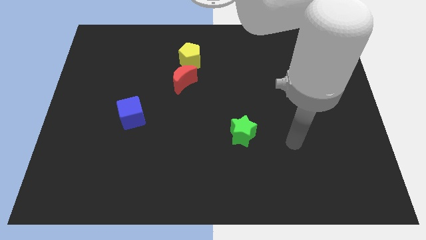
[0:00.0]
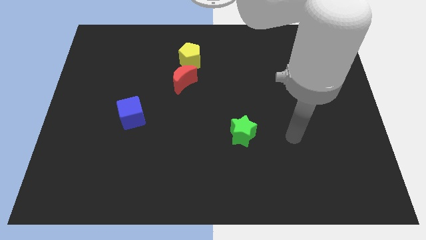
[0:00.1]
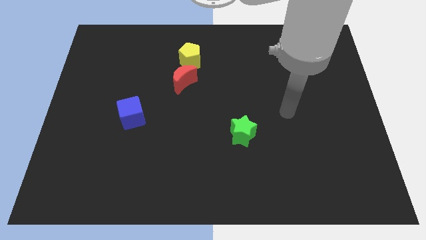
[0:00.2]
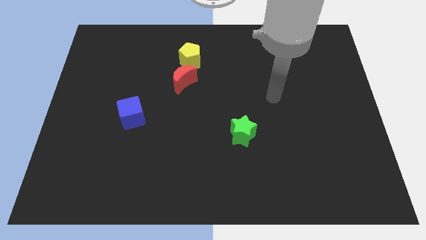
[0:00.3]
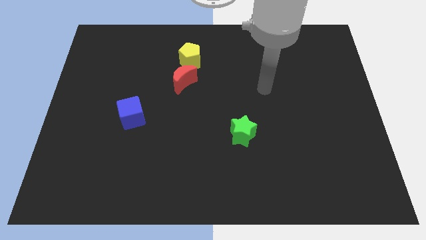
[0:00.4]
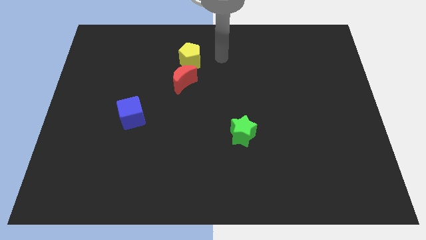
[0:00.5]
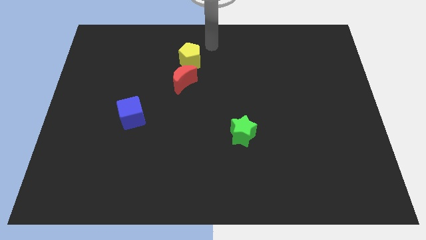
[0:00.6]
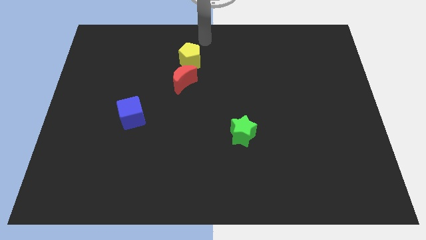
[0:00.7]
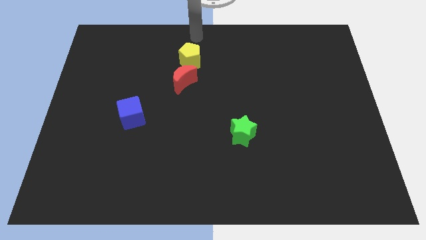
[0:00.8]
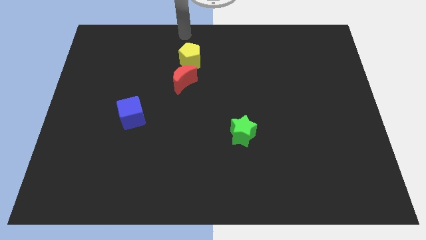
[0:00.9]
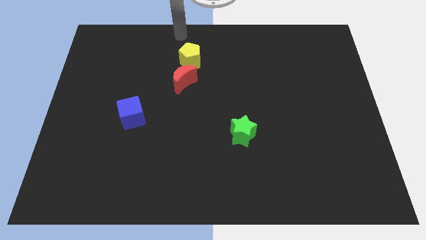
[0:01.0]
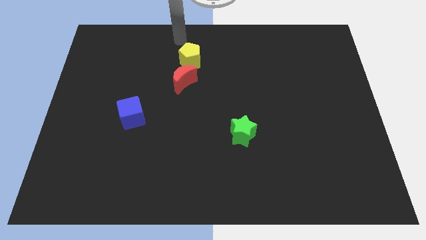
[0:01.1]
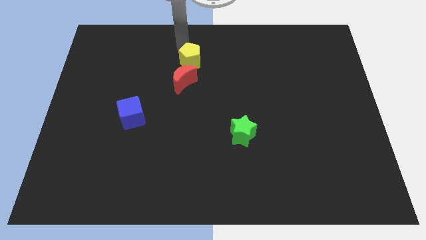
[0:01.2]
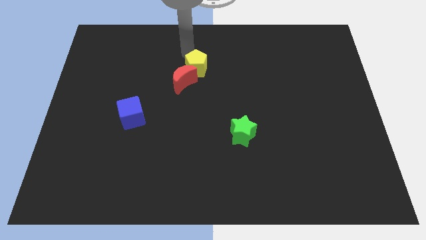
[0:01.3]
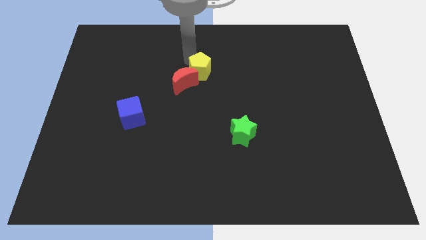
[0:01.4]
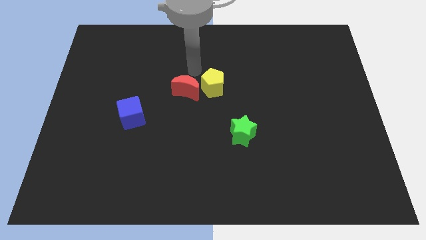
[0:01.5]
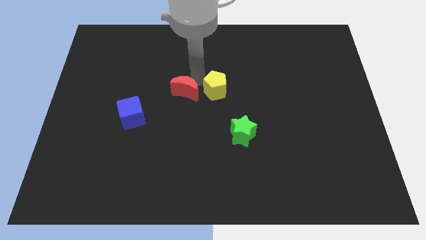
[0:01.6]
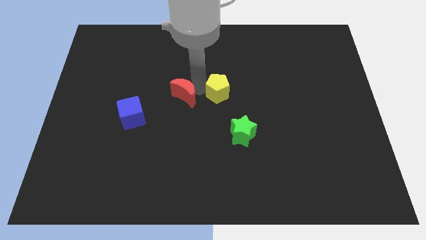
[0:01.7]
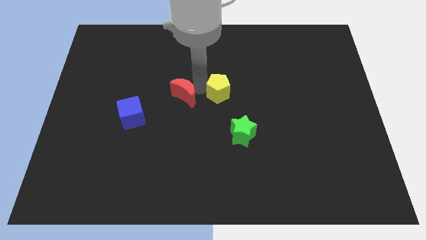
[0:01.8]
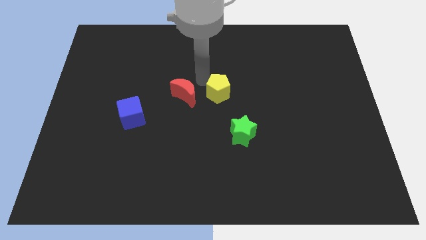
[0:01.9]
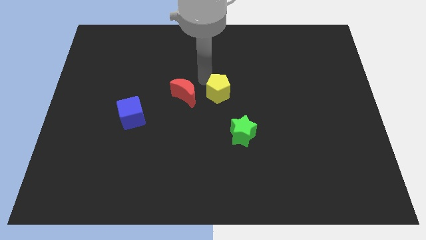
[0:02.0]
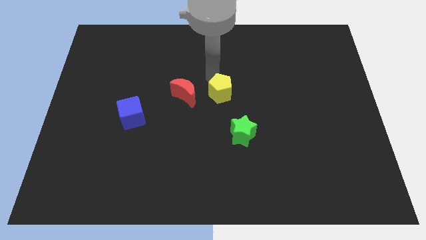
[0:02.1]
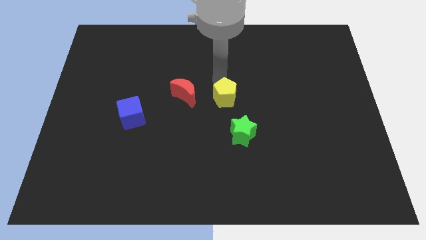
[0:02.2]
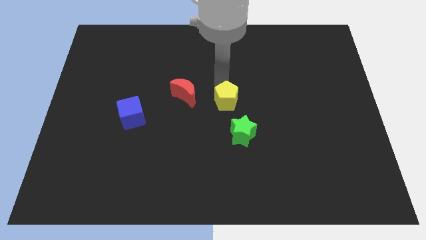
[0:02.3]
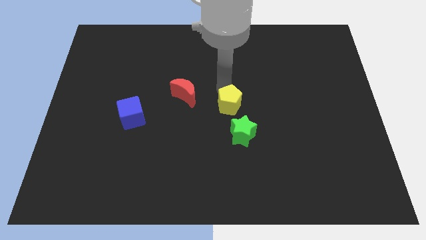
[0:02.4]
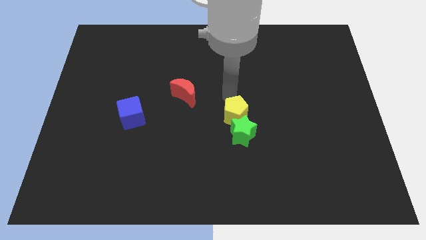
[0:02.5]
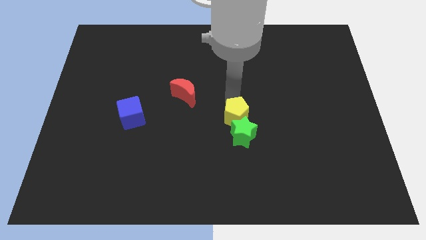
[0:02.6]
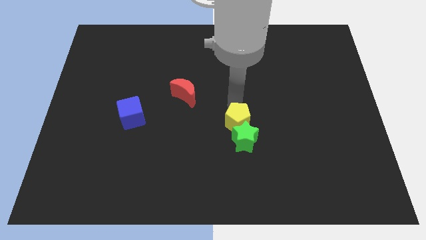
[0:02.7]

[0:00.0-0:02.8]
push the yellow block towards the green block

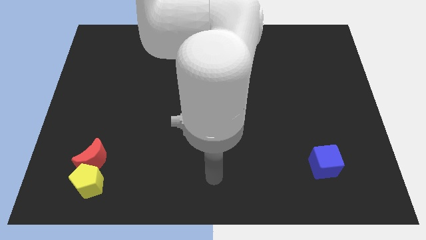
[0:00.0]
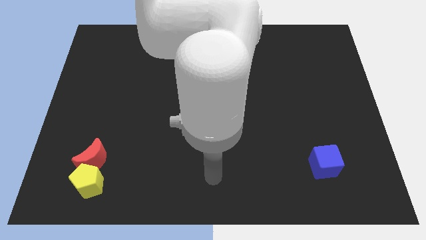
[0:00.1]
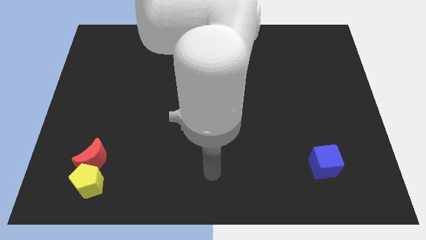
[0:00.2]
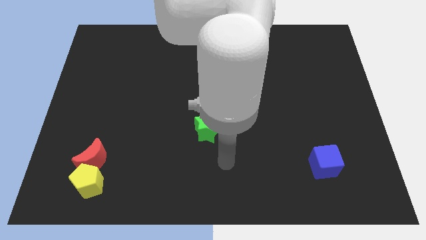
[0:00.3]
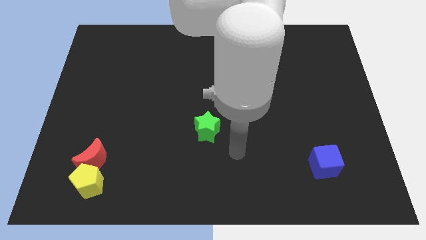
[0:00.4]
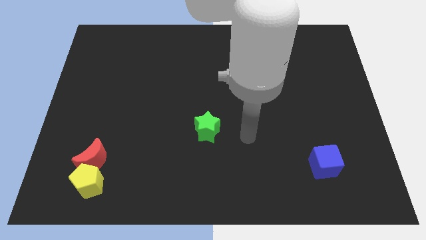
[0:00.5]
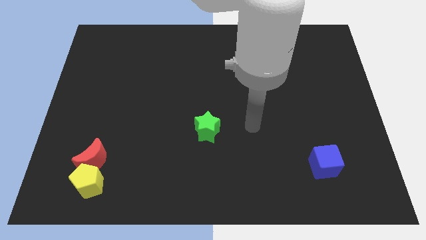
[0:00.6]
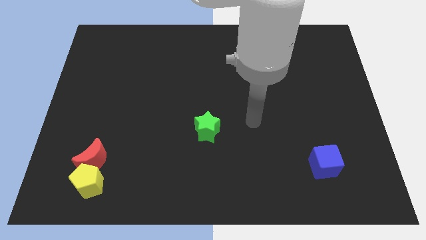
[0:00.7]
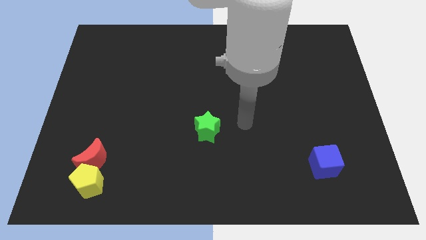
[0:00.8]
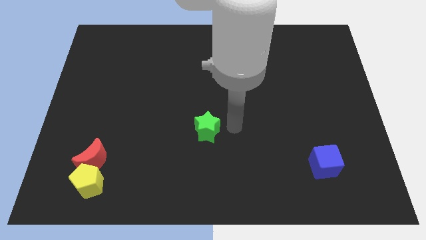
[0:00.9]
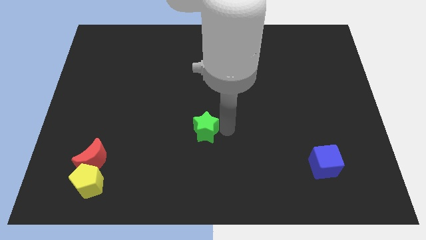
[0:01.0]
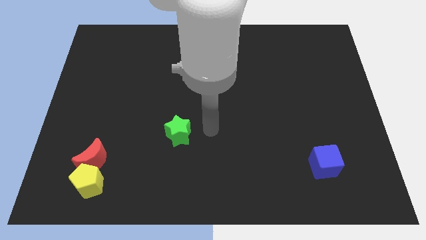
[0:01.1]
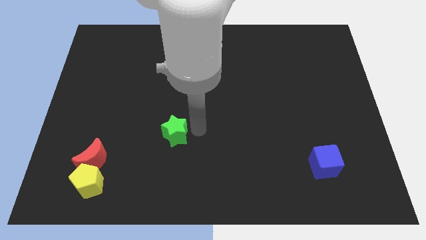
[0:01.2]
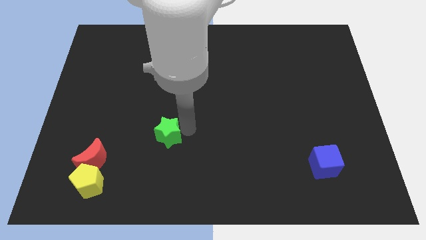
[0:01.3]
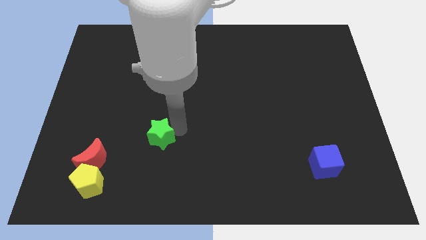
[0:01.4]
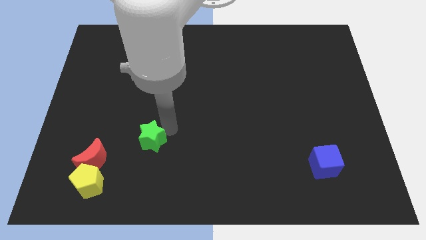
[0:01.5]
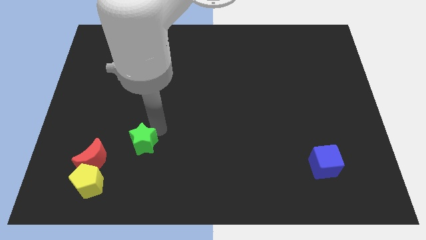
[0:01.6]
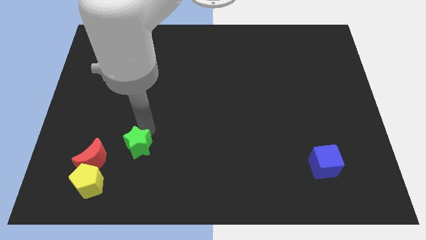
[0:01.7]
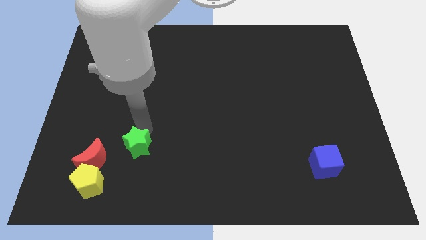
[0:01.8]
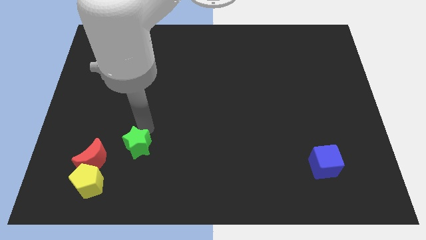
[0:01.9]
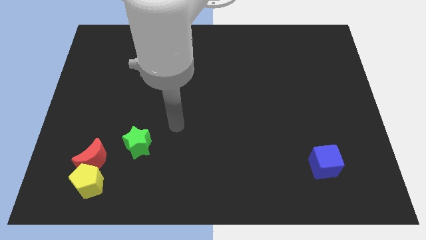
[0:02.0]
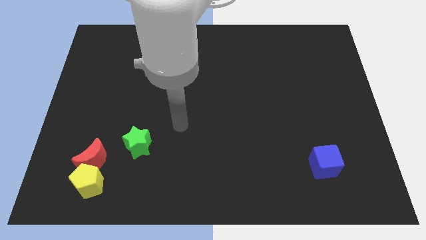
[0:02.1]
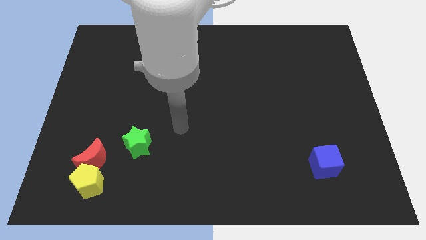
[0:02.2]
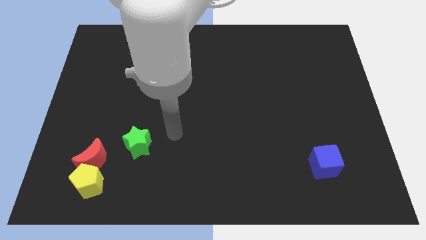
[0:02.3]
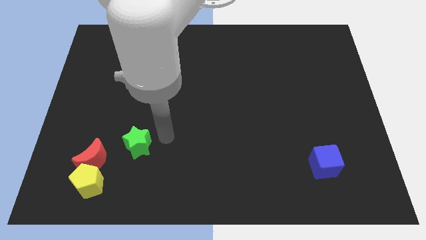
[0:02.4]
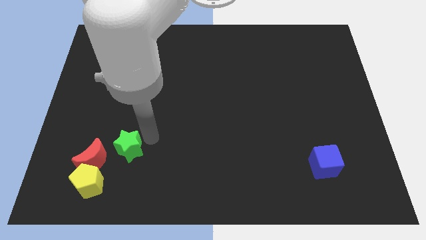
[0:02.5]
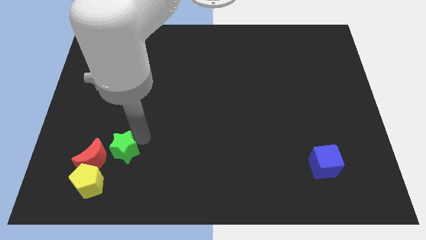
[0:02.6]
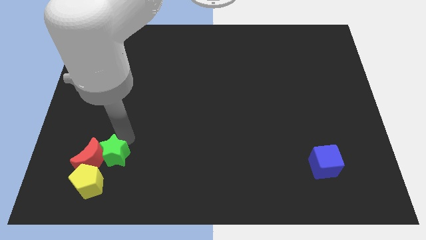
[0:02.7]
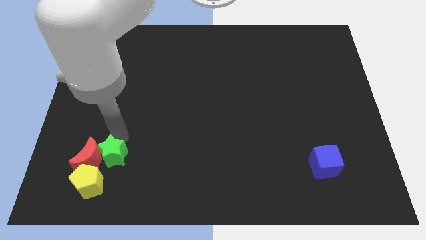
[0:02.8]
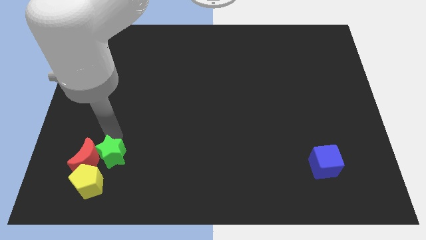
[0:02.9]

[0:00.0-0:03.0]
push the green block towards the moon

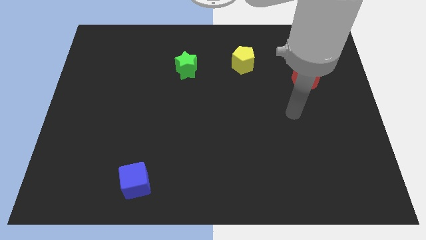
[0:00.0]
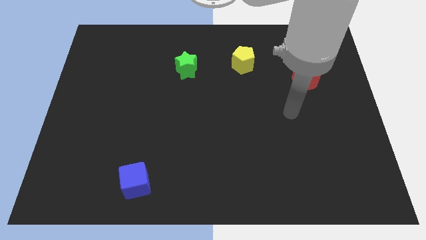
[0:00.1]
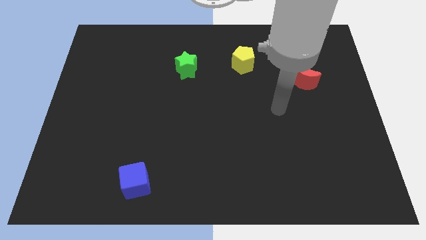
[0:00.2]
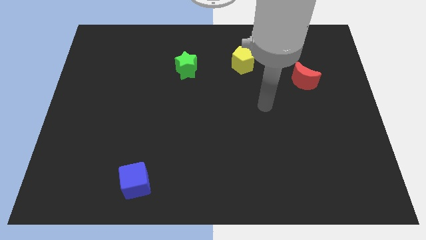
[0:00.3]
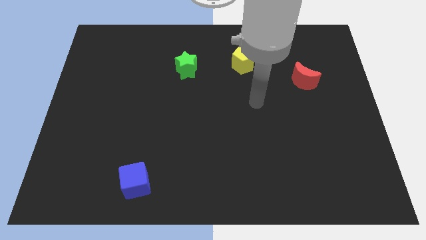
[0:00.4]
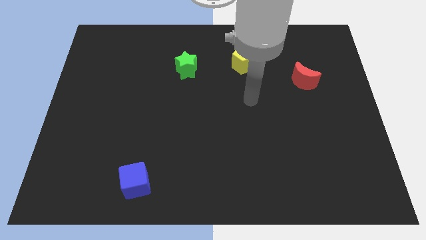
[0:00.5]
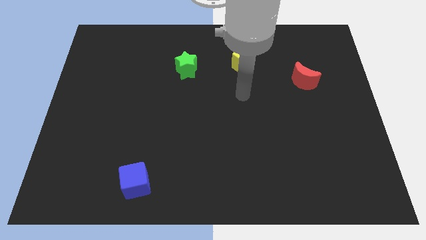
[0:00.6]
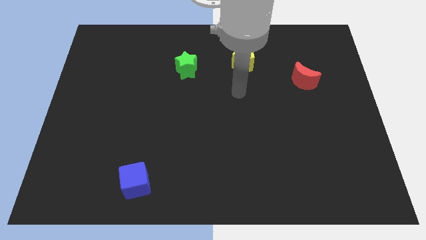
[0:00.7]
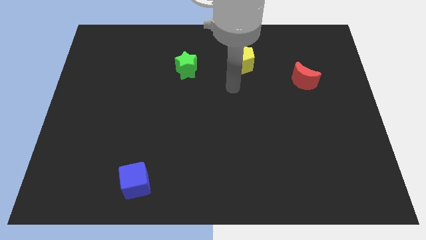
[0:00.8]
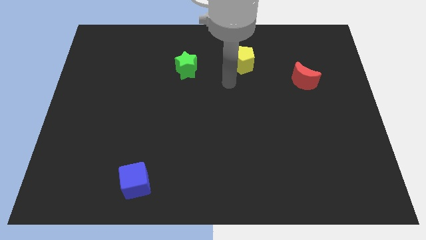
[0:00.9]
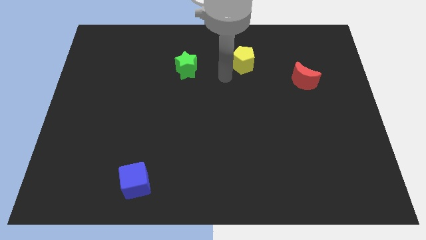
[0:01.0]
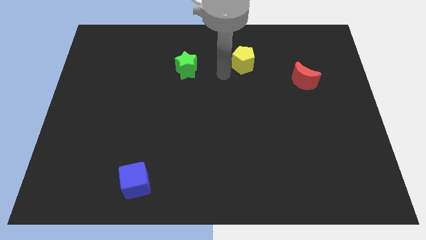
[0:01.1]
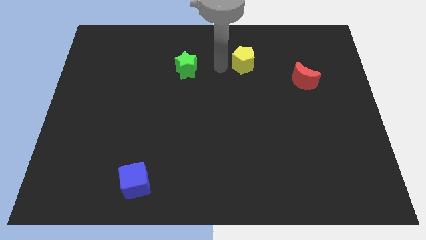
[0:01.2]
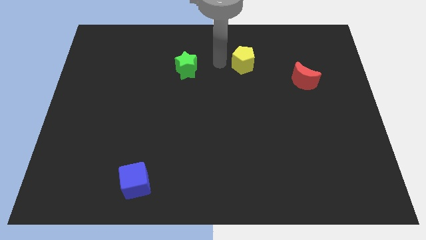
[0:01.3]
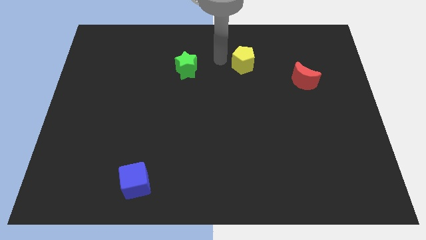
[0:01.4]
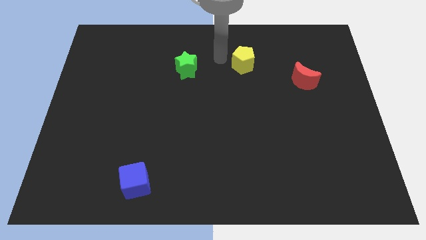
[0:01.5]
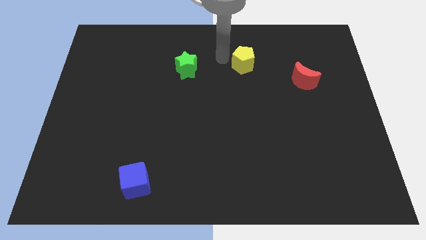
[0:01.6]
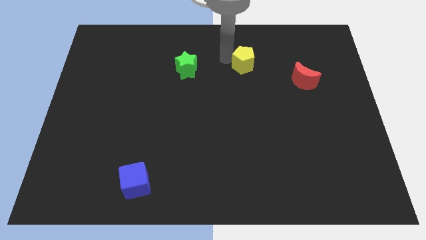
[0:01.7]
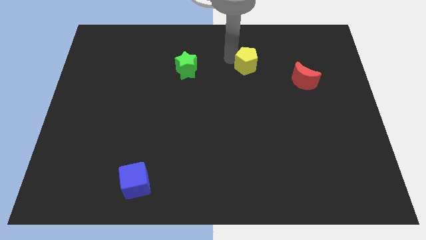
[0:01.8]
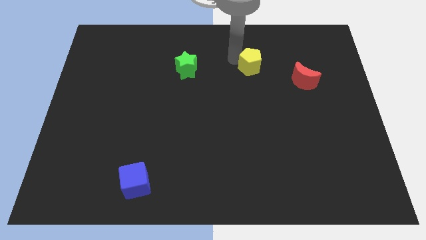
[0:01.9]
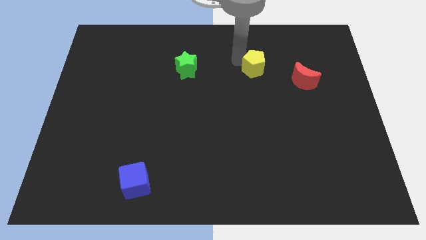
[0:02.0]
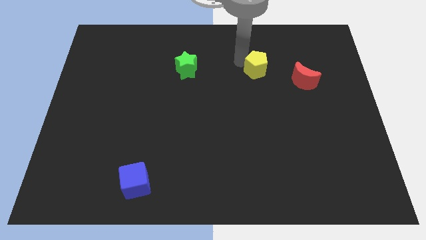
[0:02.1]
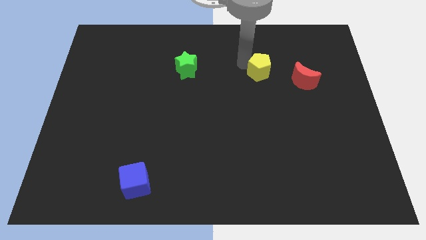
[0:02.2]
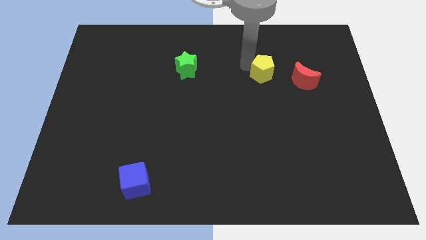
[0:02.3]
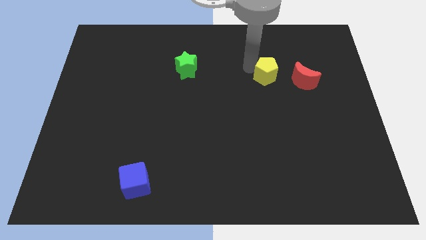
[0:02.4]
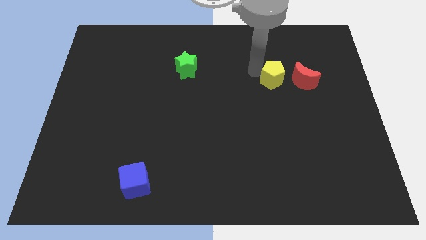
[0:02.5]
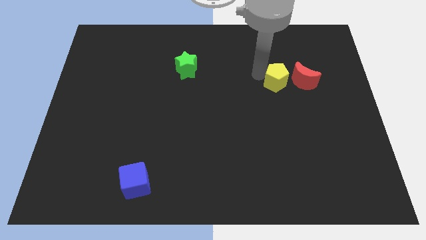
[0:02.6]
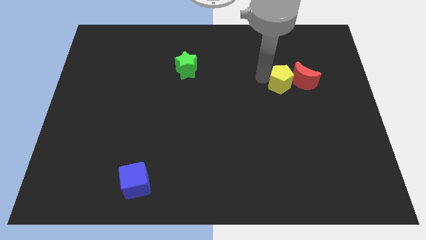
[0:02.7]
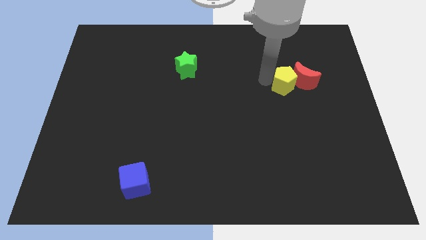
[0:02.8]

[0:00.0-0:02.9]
put the yellow pentagon to the red block
